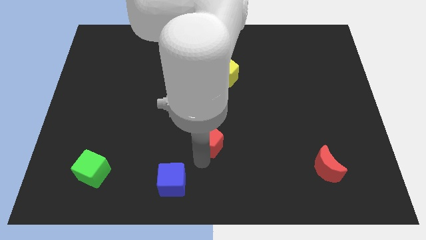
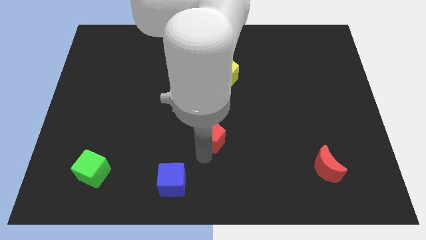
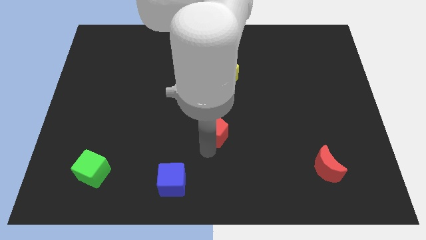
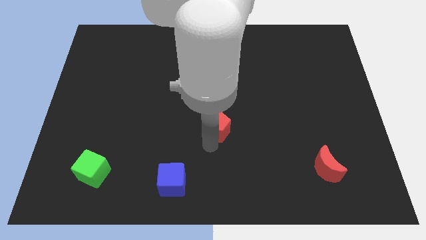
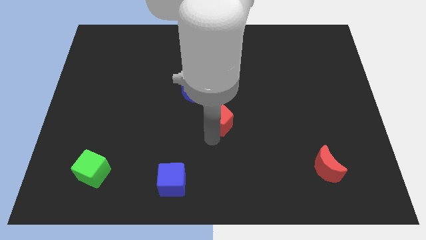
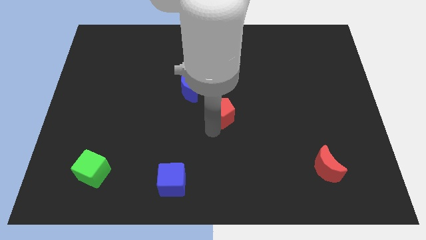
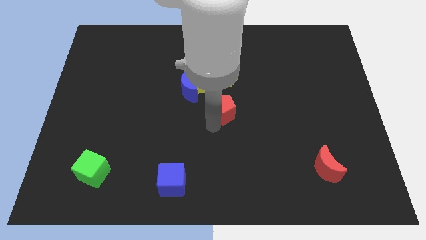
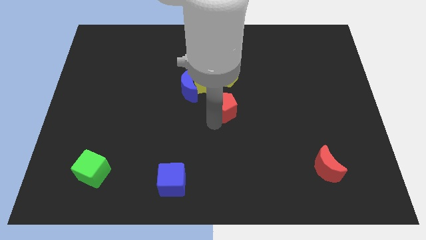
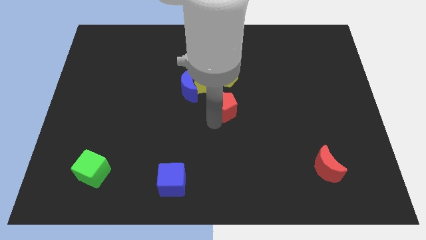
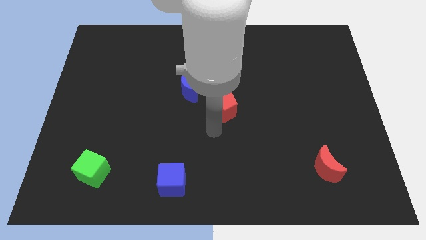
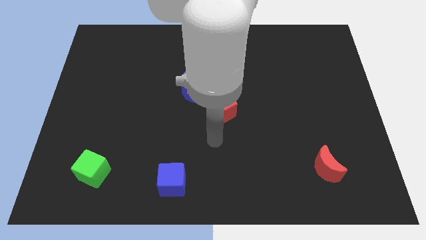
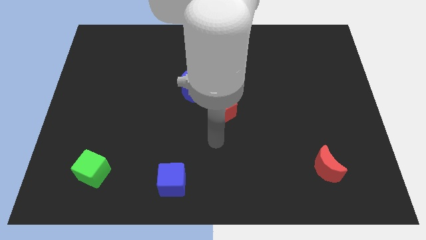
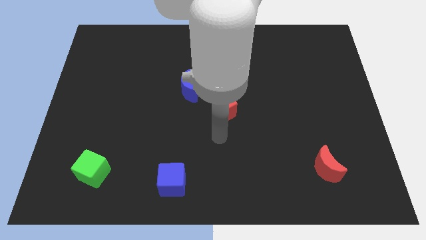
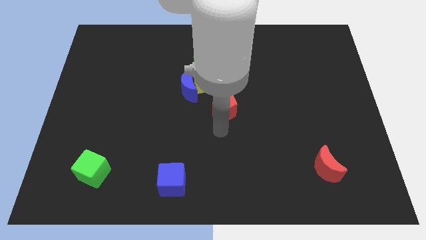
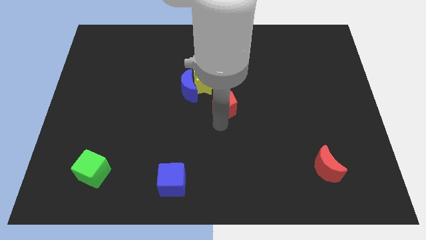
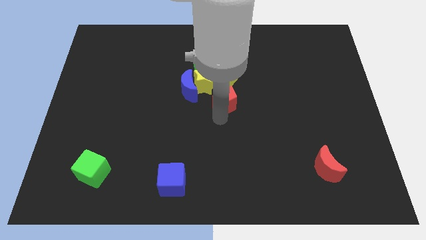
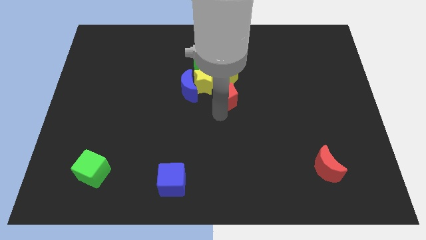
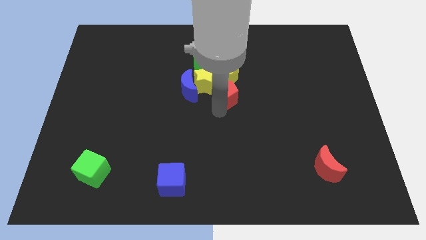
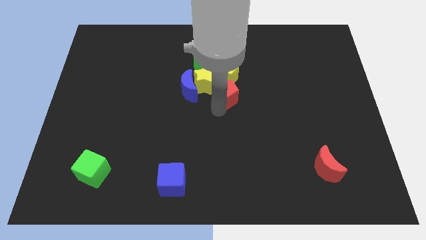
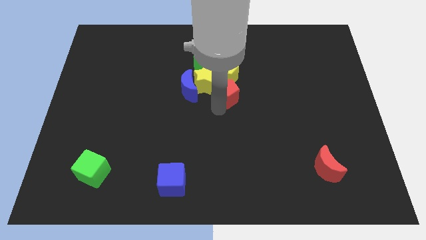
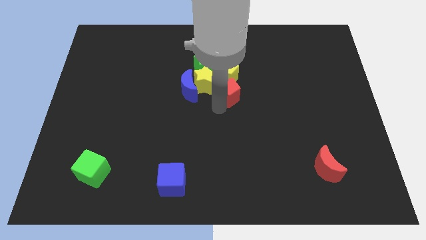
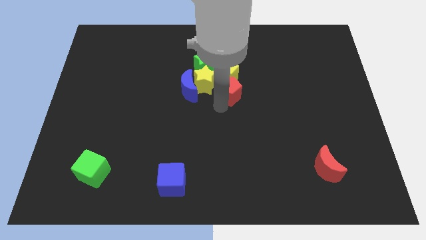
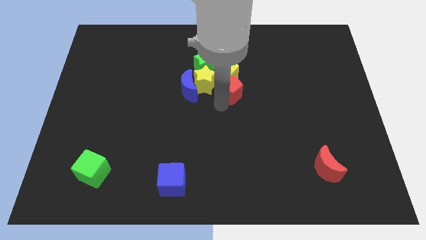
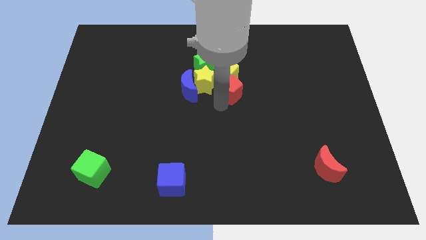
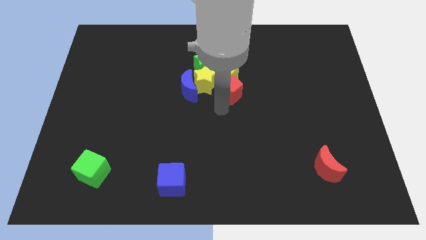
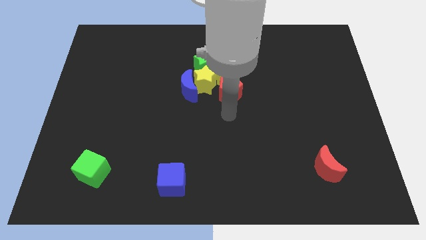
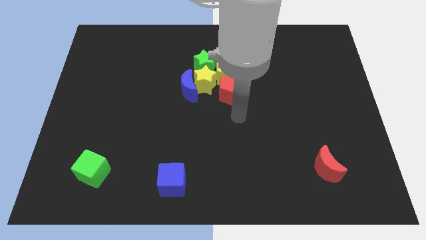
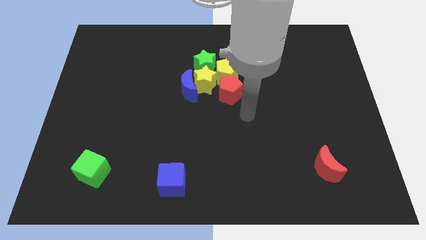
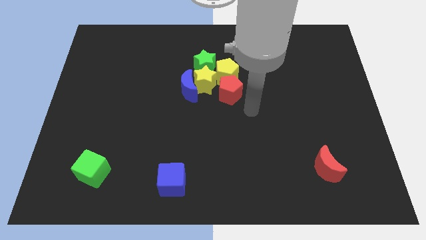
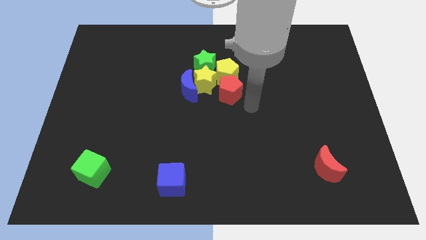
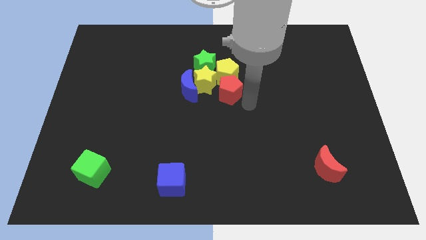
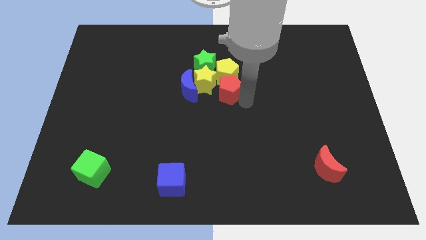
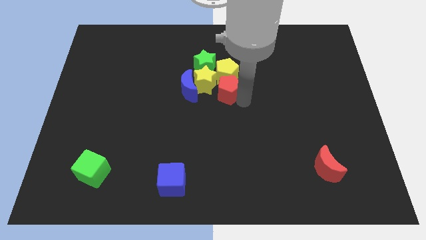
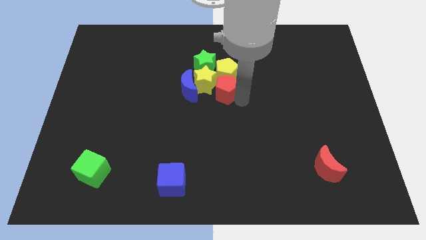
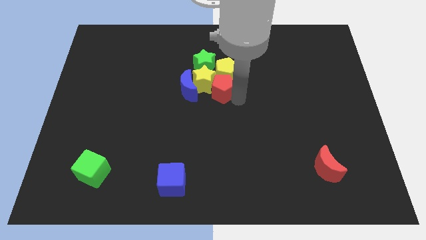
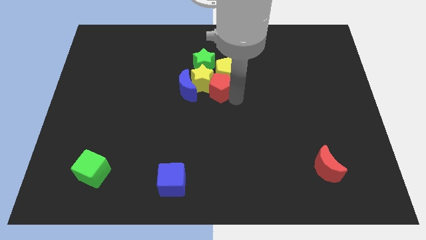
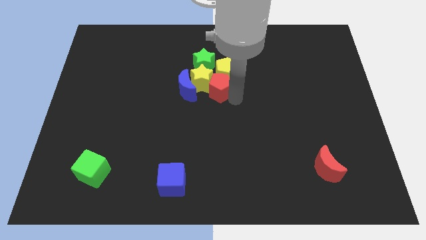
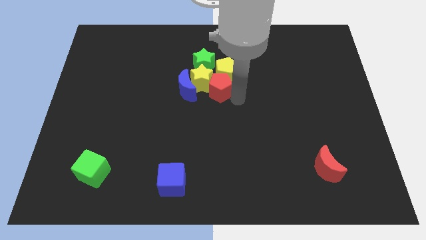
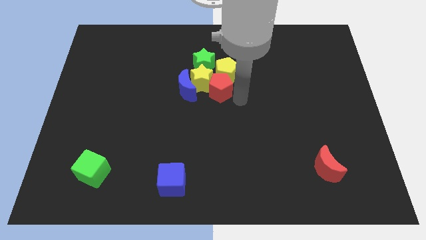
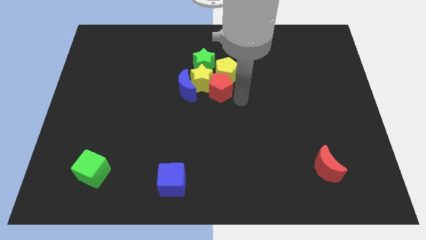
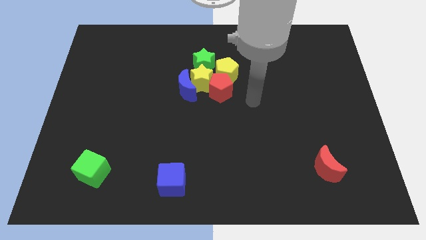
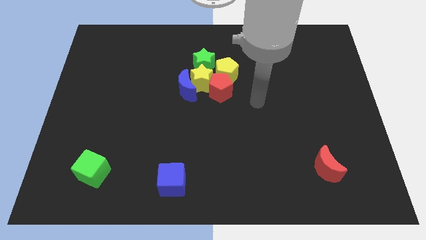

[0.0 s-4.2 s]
push the red pentagon towards group of objects

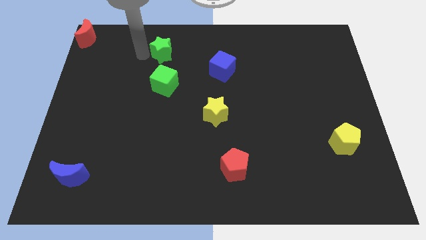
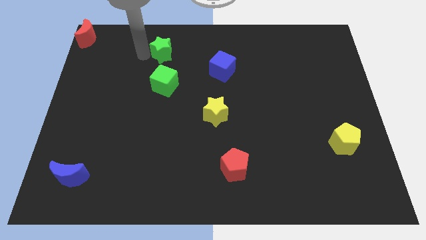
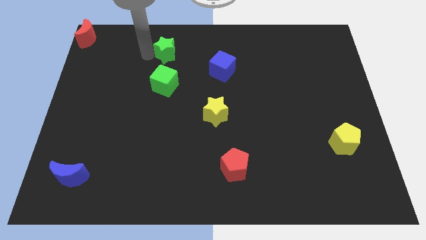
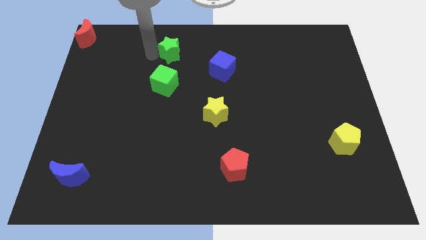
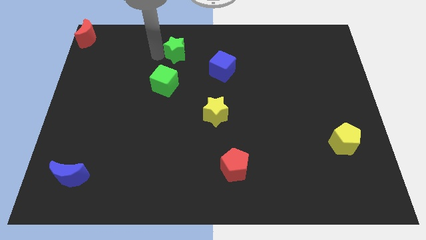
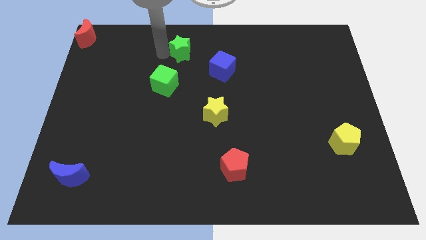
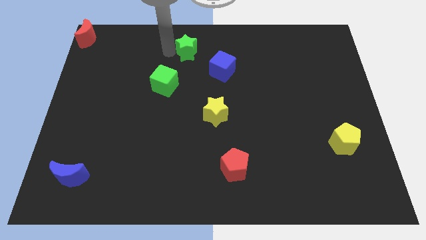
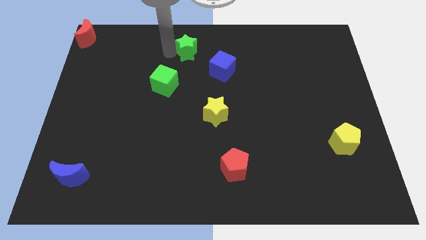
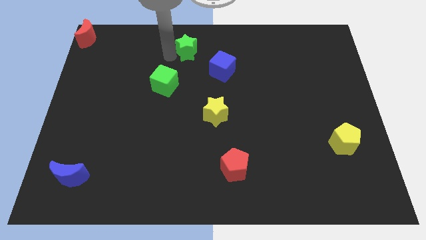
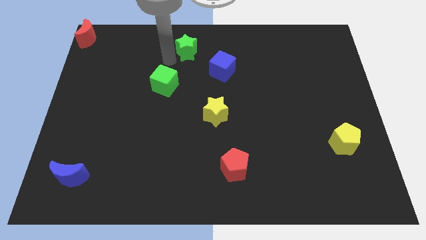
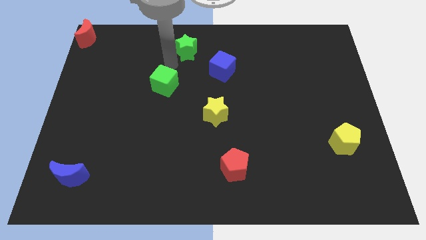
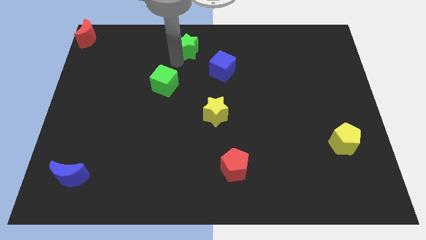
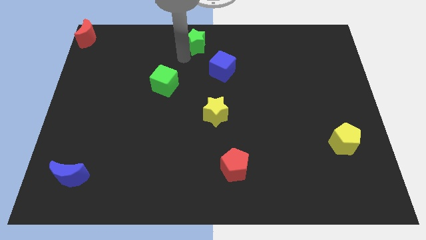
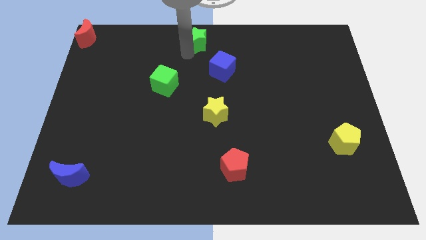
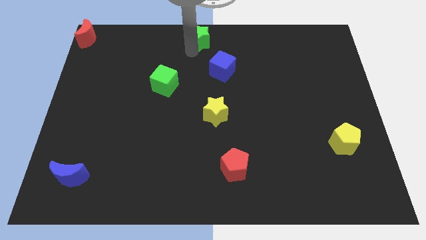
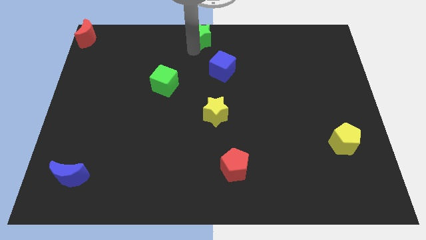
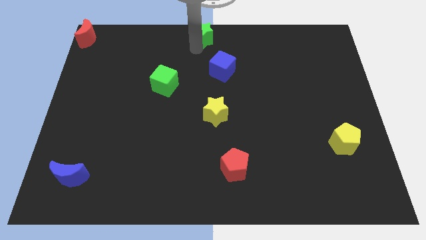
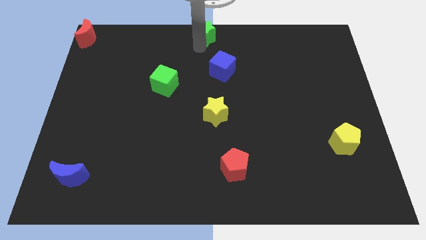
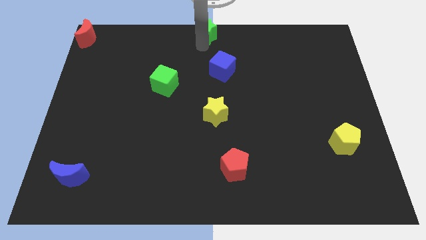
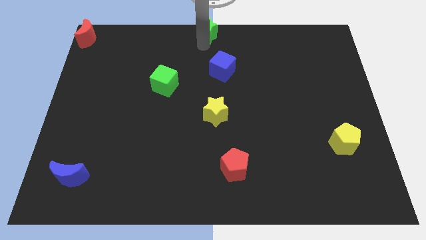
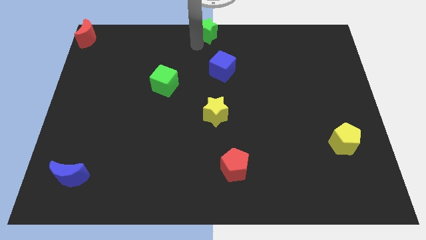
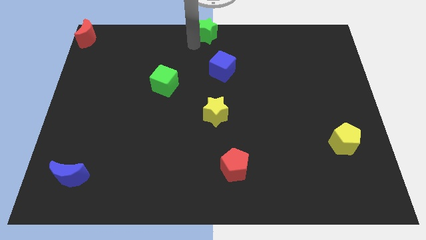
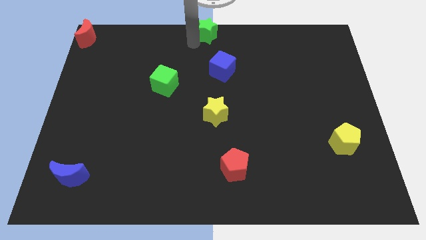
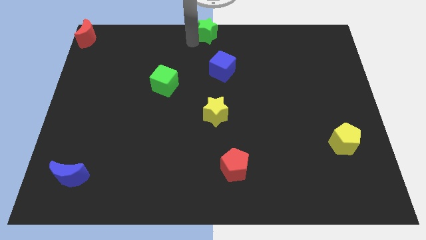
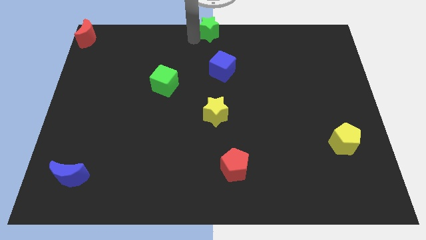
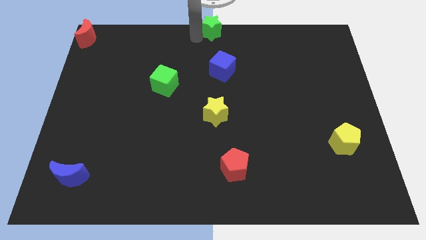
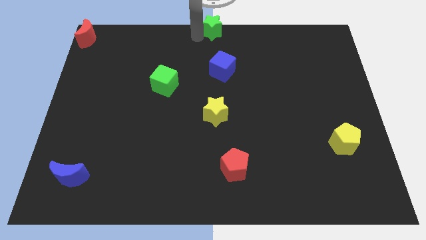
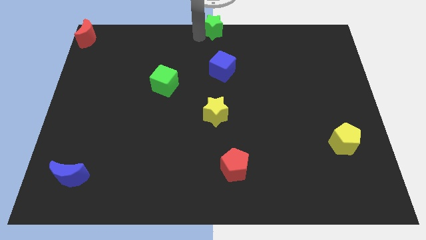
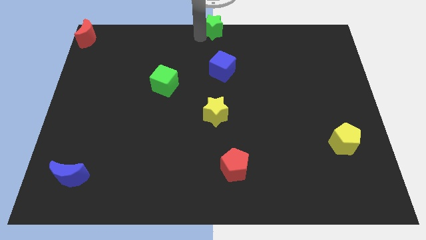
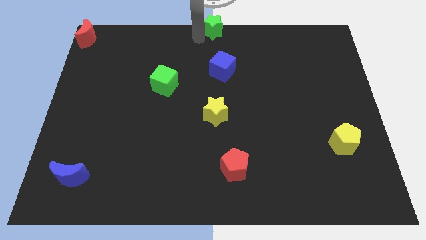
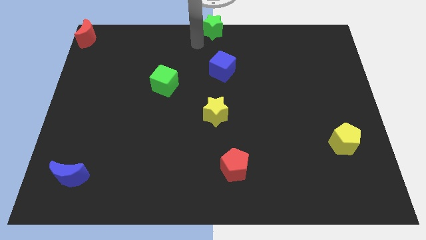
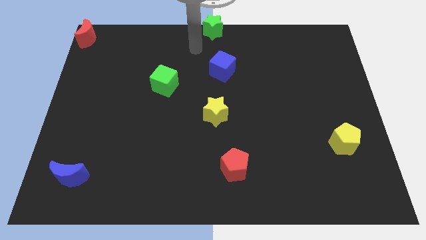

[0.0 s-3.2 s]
slide green star to the top center of the board

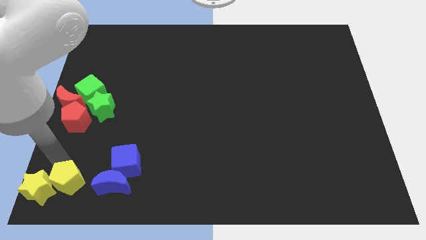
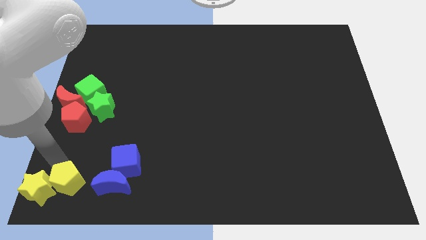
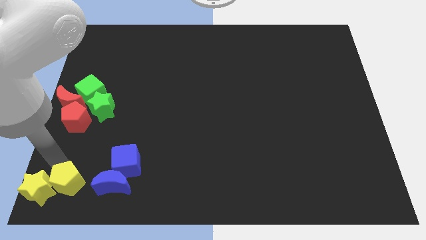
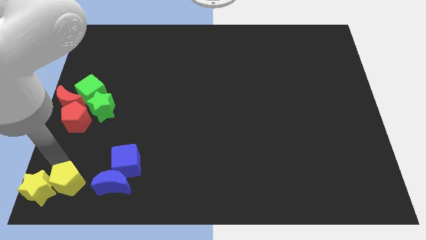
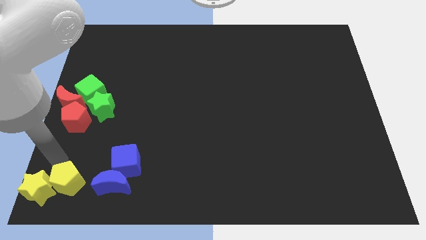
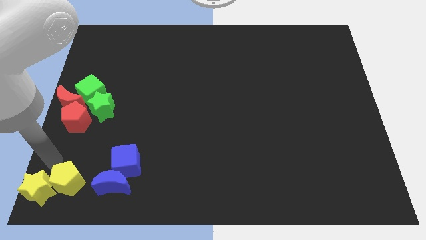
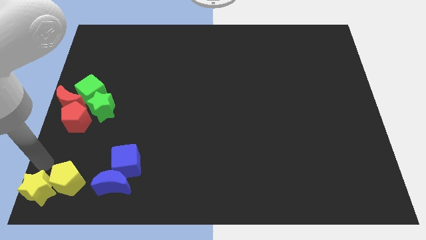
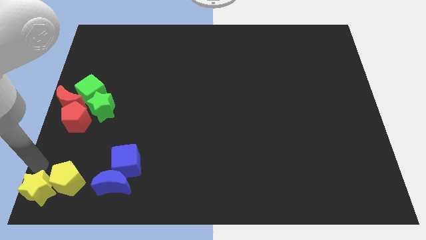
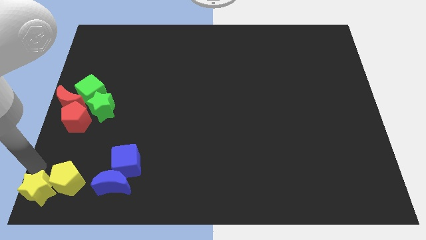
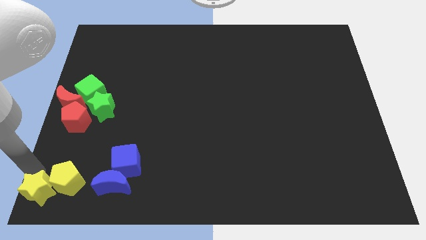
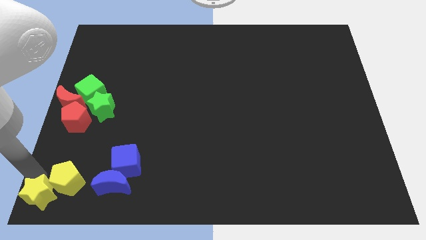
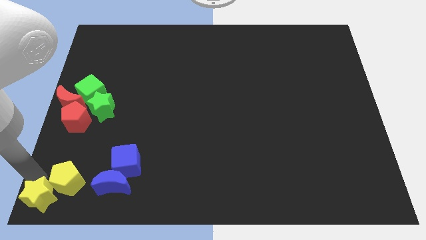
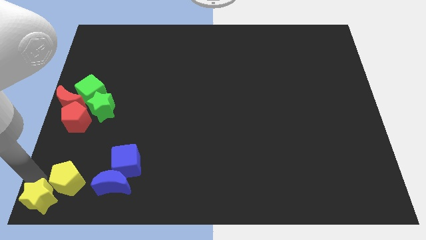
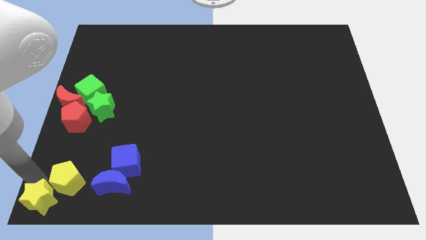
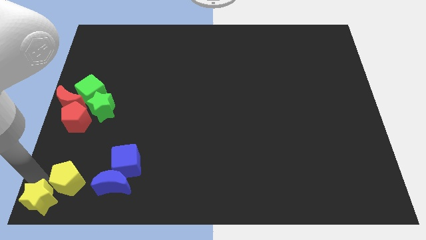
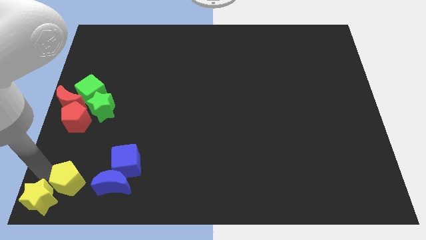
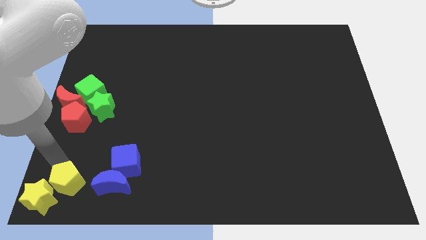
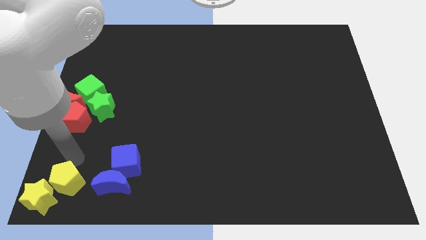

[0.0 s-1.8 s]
push the yellow blocks to the bottom right of the board
